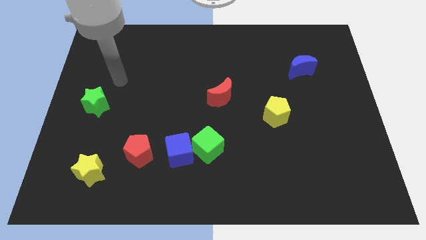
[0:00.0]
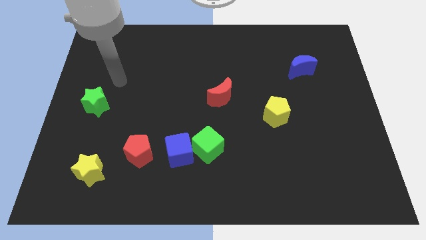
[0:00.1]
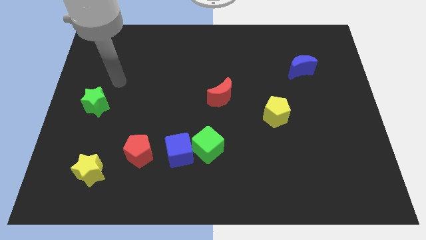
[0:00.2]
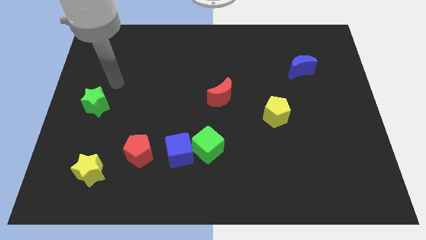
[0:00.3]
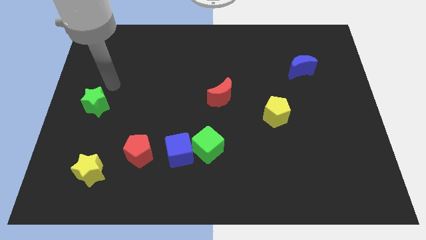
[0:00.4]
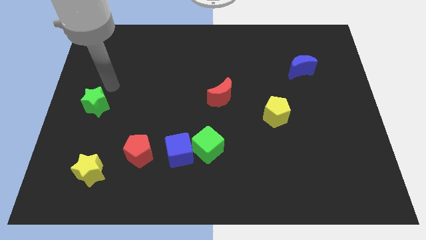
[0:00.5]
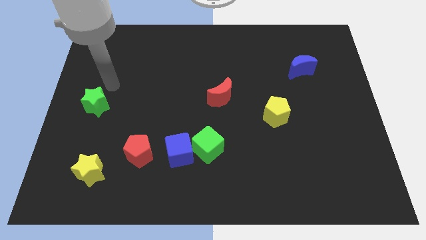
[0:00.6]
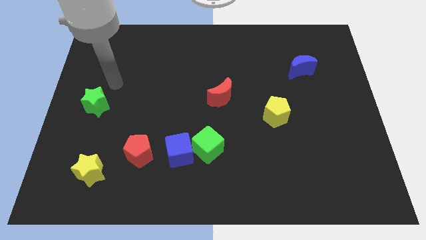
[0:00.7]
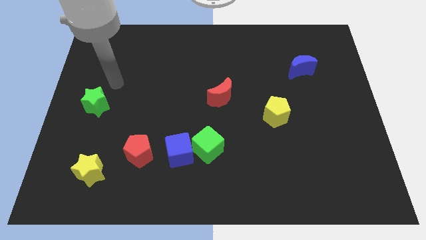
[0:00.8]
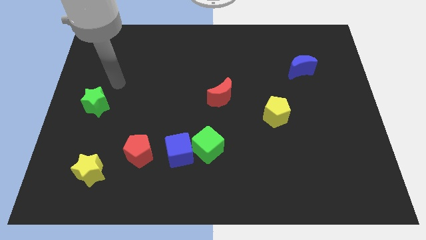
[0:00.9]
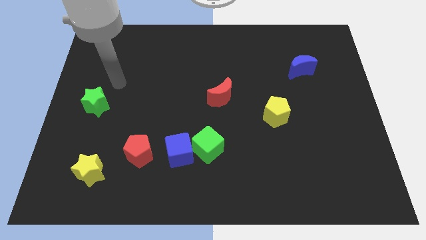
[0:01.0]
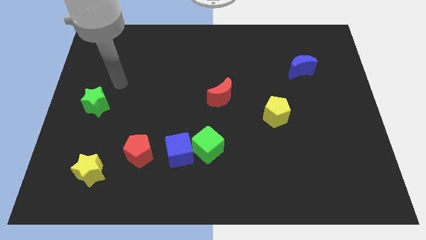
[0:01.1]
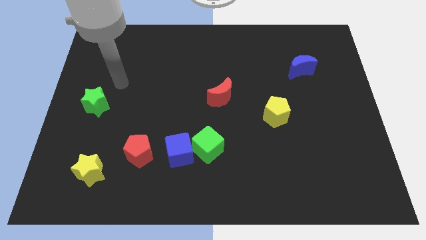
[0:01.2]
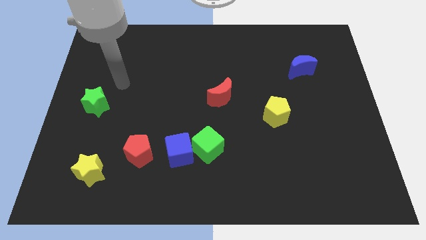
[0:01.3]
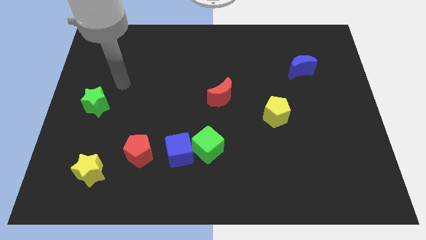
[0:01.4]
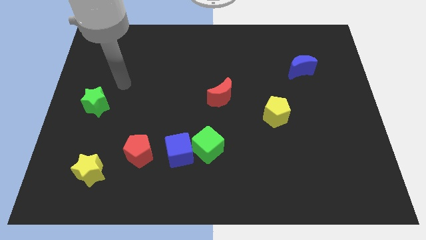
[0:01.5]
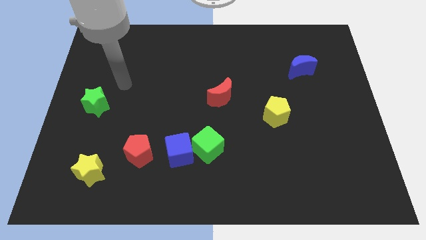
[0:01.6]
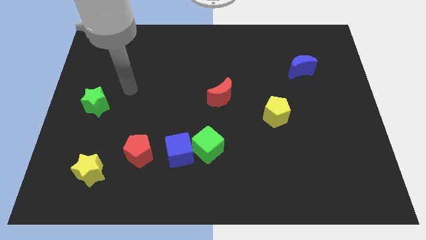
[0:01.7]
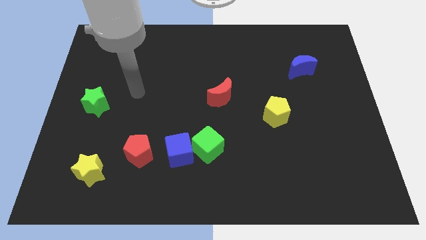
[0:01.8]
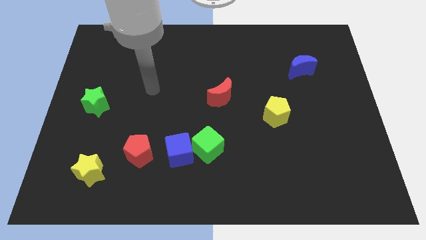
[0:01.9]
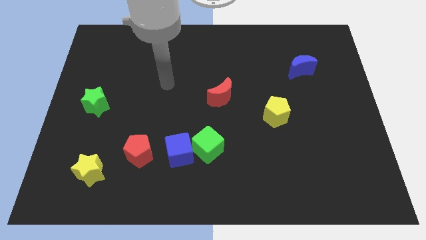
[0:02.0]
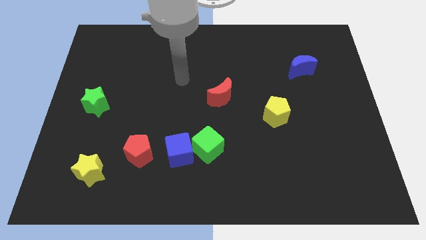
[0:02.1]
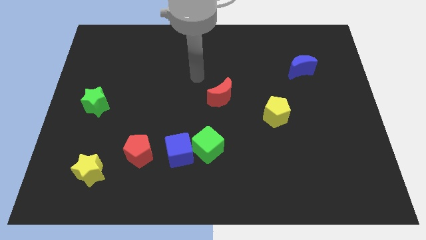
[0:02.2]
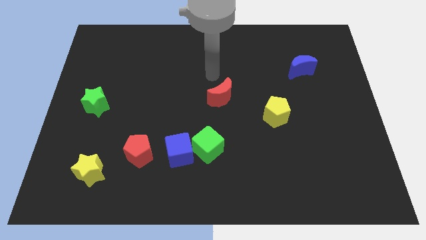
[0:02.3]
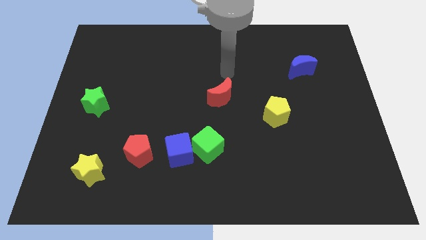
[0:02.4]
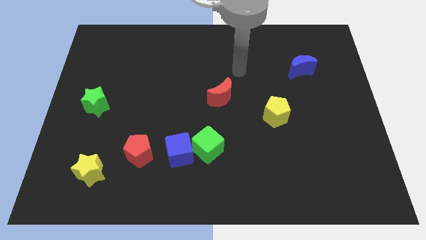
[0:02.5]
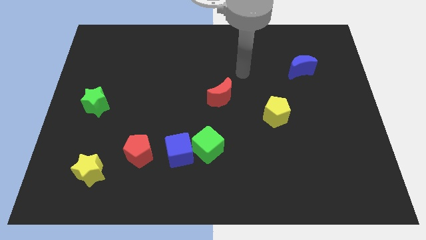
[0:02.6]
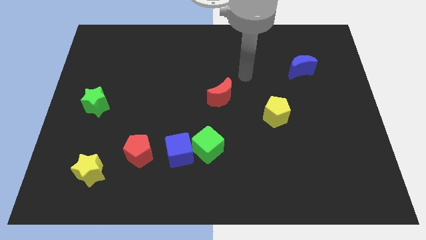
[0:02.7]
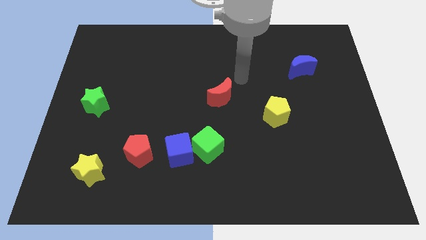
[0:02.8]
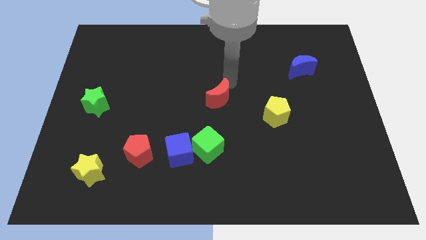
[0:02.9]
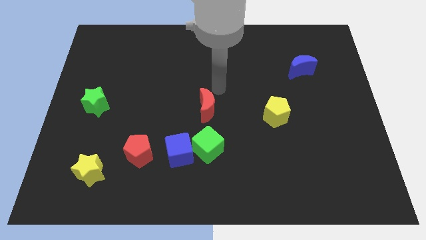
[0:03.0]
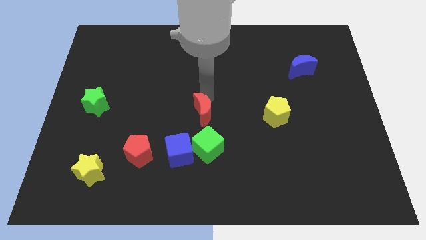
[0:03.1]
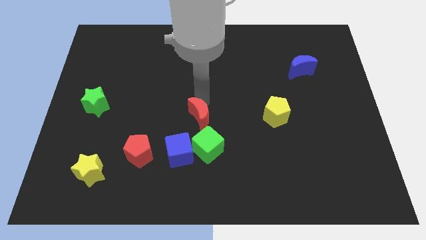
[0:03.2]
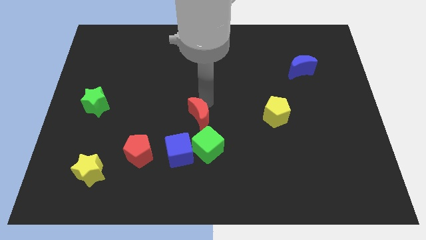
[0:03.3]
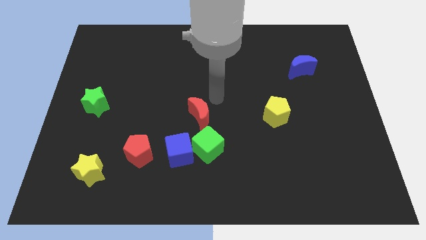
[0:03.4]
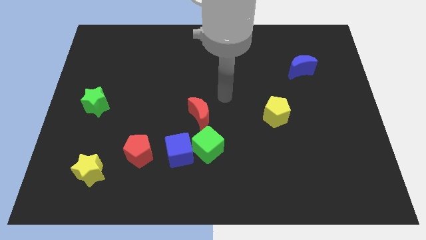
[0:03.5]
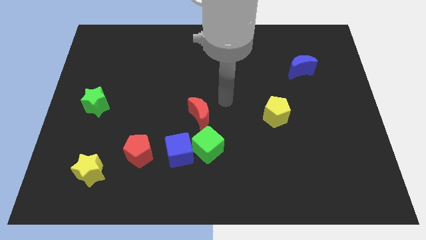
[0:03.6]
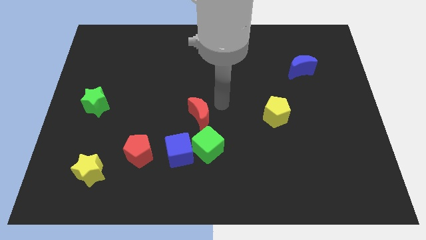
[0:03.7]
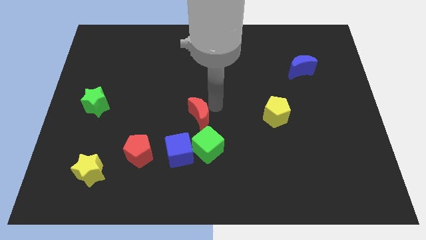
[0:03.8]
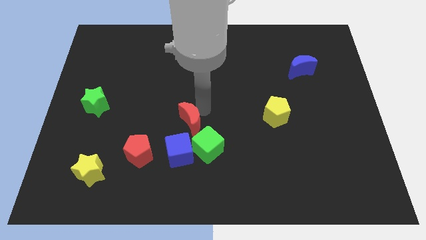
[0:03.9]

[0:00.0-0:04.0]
move red moon near green cube

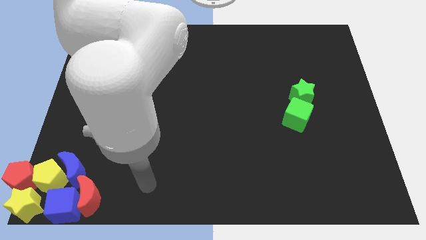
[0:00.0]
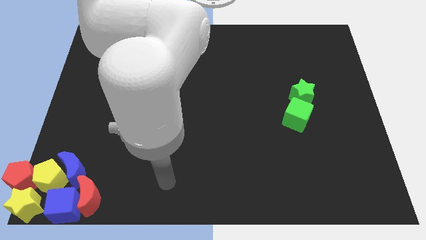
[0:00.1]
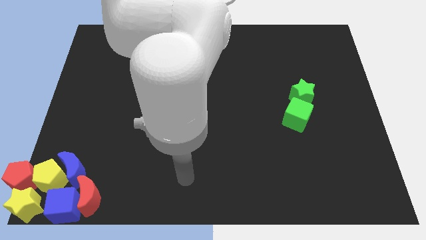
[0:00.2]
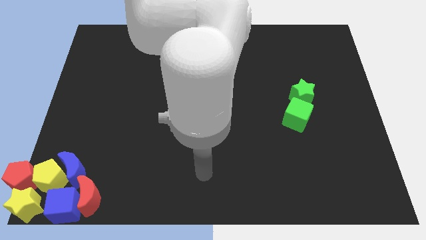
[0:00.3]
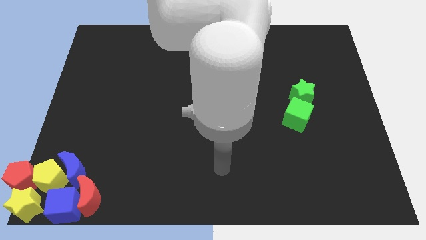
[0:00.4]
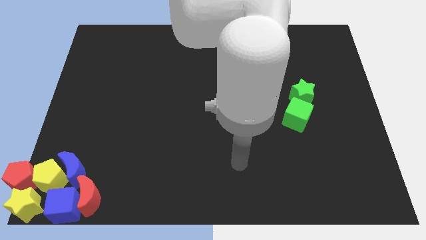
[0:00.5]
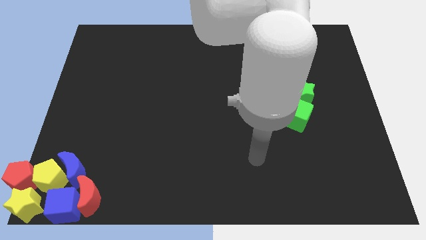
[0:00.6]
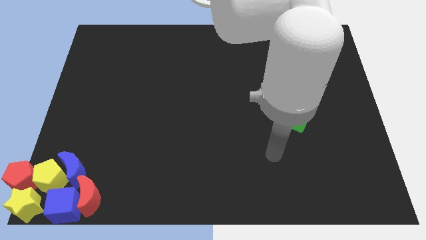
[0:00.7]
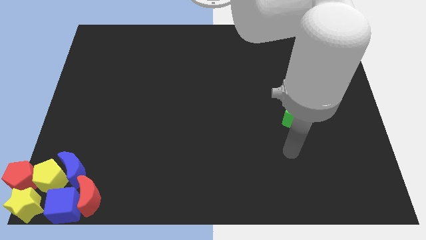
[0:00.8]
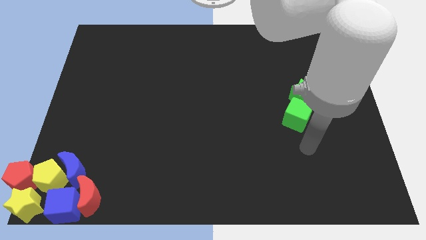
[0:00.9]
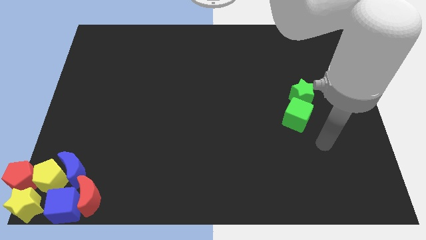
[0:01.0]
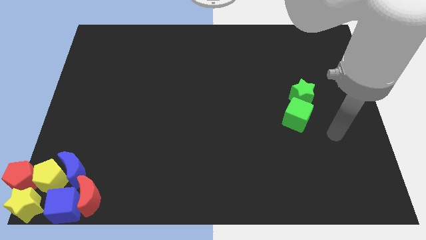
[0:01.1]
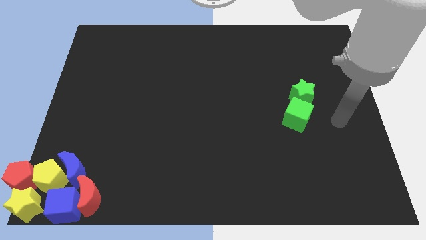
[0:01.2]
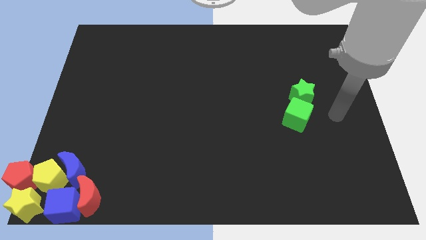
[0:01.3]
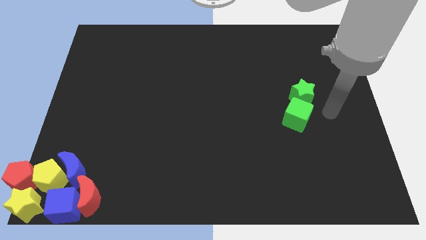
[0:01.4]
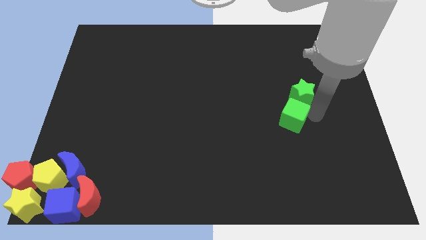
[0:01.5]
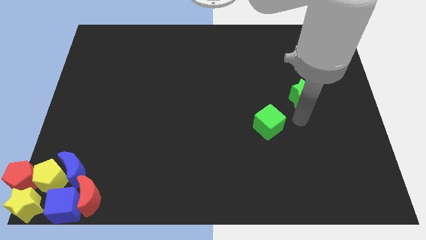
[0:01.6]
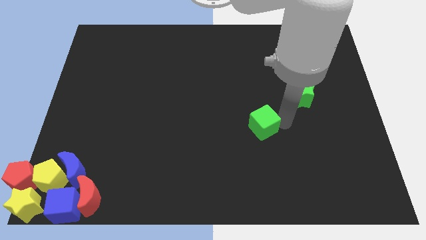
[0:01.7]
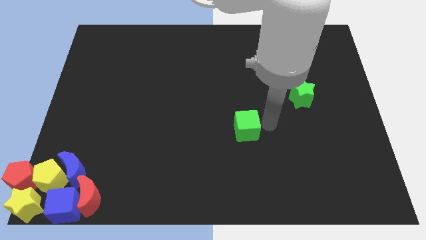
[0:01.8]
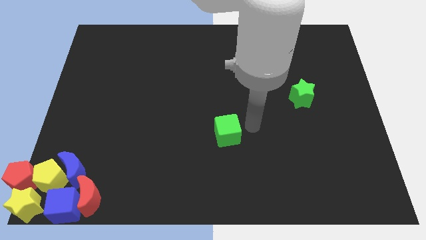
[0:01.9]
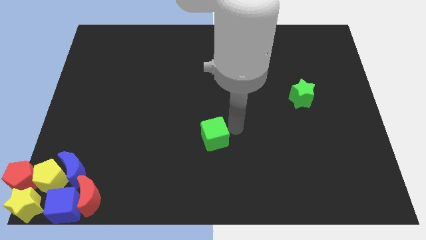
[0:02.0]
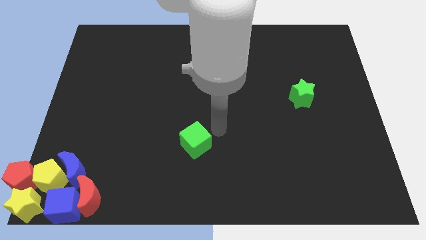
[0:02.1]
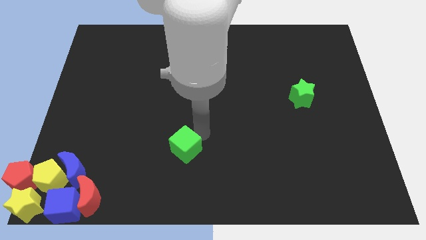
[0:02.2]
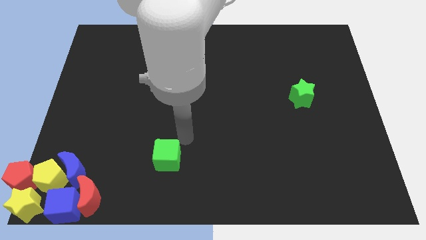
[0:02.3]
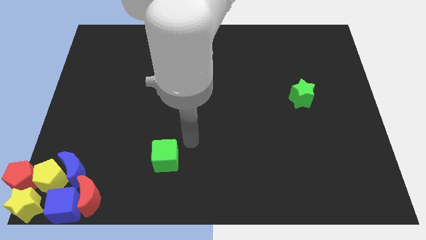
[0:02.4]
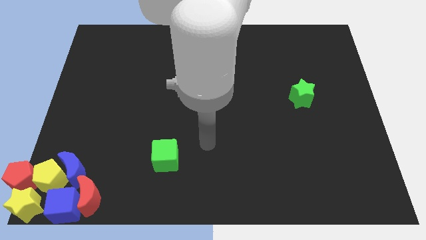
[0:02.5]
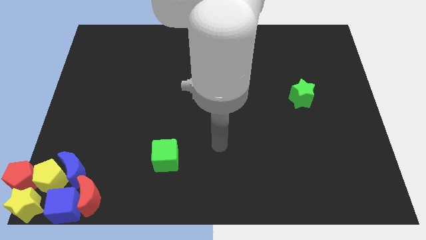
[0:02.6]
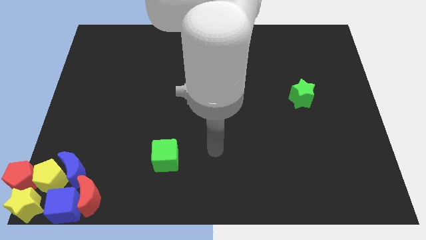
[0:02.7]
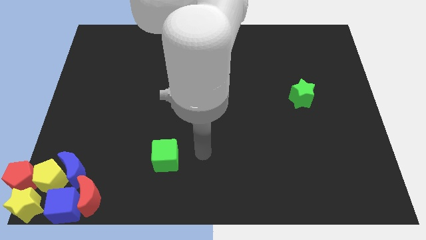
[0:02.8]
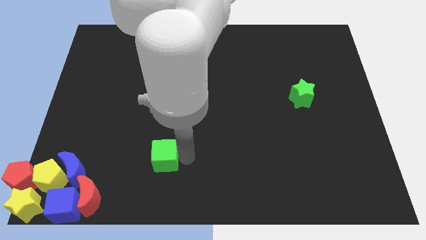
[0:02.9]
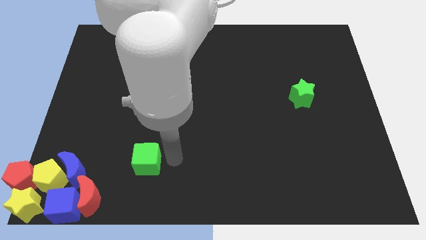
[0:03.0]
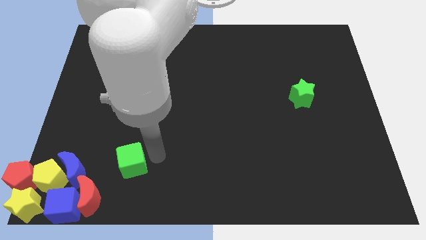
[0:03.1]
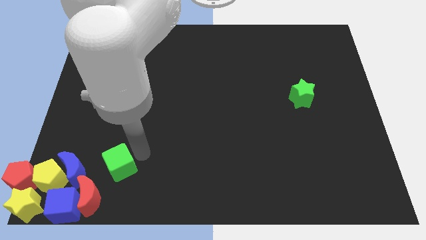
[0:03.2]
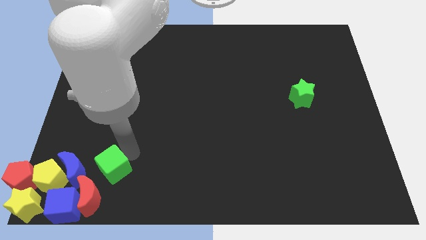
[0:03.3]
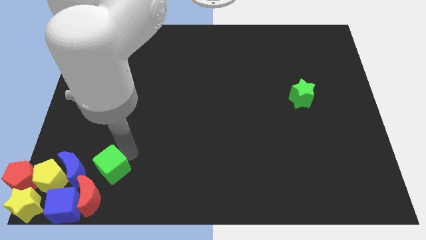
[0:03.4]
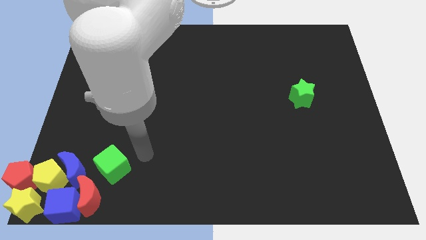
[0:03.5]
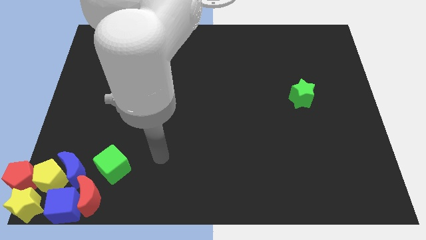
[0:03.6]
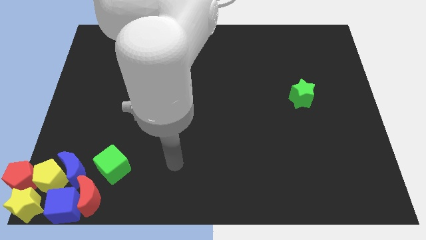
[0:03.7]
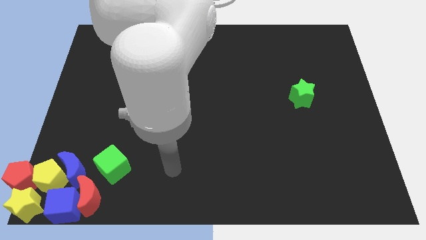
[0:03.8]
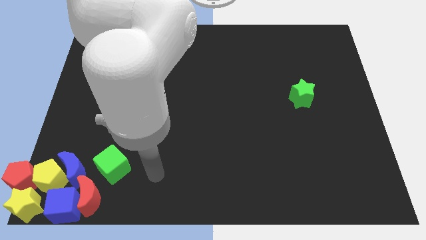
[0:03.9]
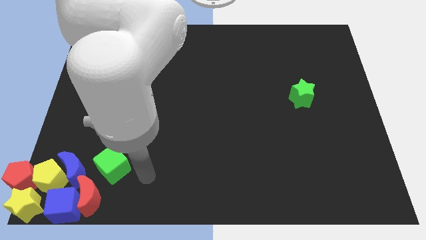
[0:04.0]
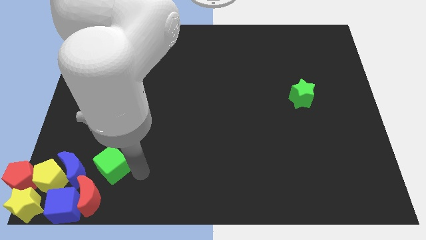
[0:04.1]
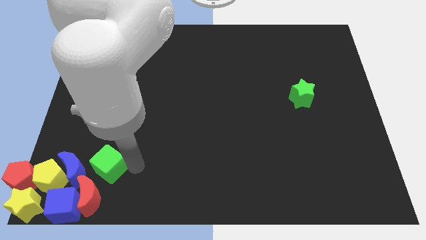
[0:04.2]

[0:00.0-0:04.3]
move the green cube to the right of the blue crescent

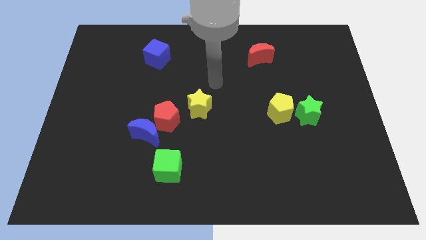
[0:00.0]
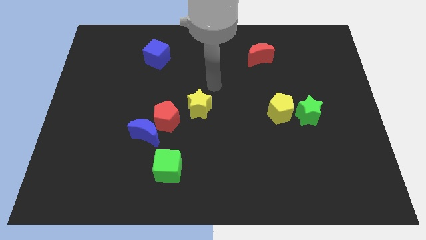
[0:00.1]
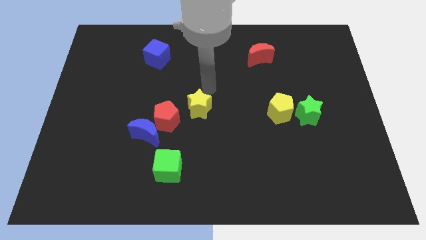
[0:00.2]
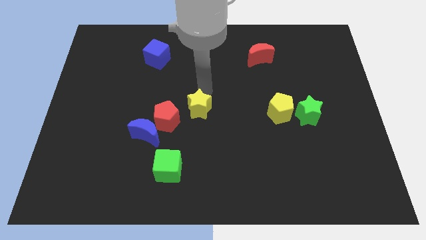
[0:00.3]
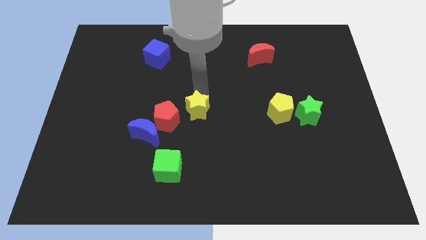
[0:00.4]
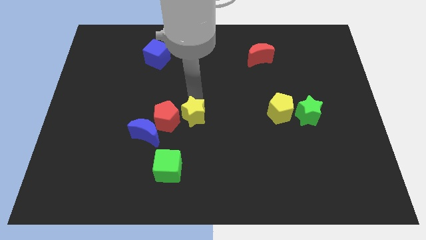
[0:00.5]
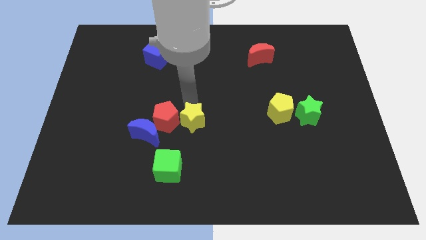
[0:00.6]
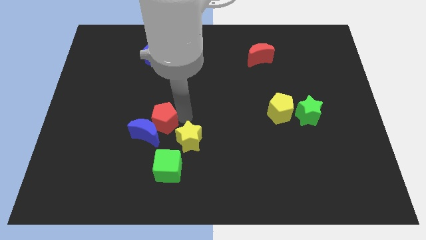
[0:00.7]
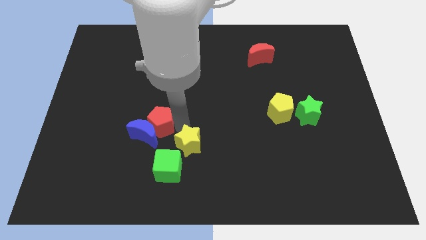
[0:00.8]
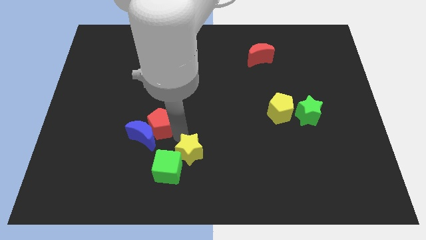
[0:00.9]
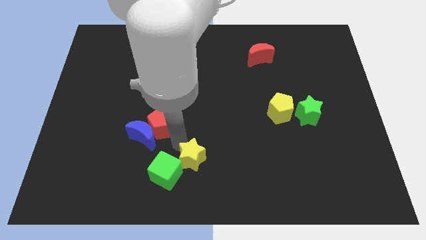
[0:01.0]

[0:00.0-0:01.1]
push the yellow star into the green cube
